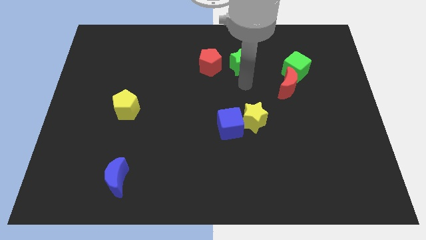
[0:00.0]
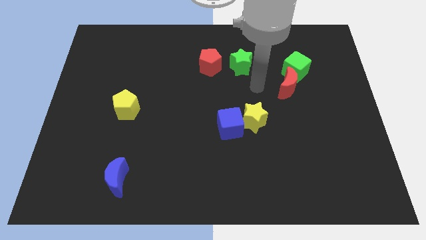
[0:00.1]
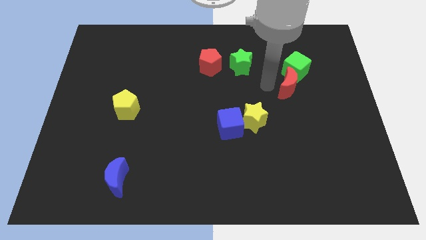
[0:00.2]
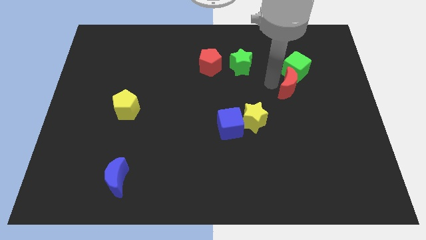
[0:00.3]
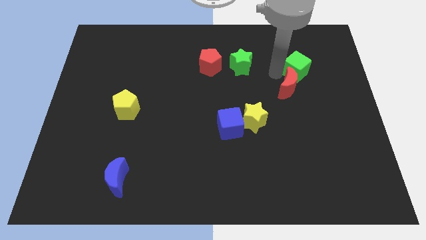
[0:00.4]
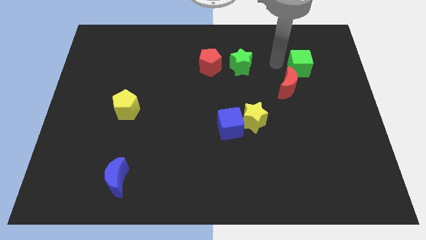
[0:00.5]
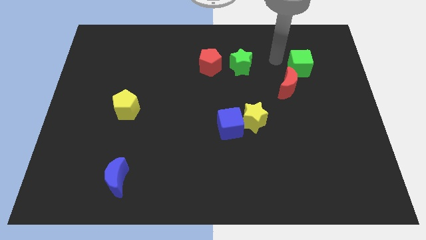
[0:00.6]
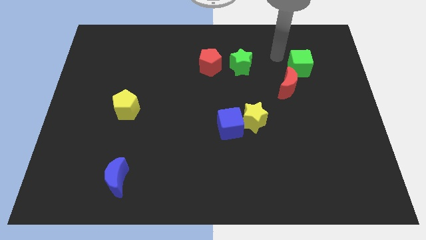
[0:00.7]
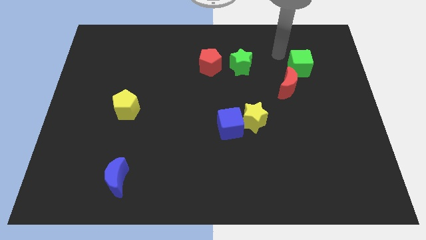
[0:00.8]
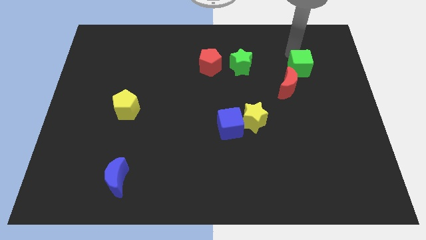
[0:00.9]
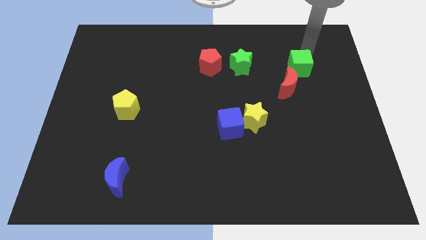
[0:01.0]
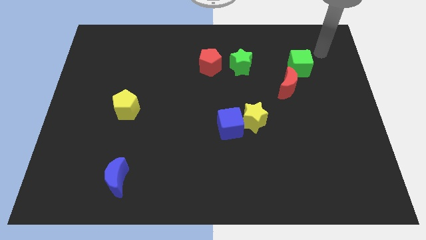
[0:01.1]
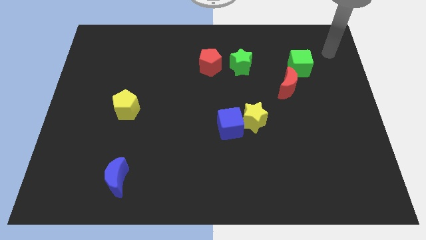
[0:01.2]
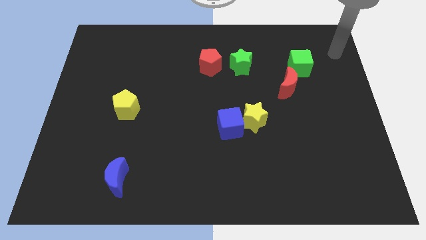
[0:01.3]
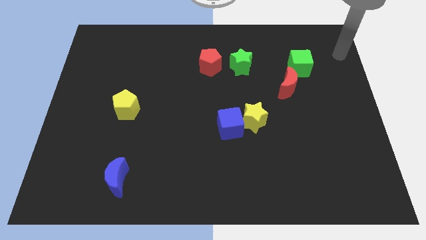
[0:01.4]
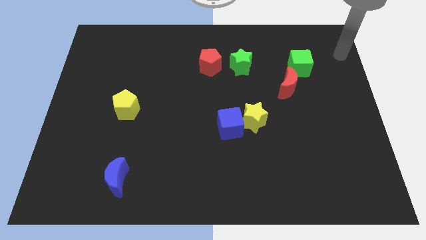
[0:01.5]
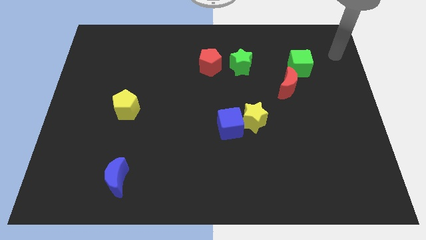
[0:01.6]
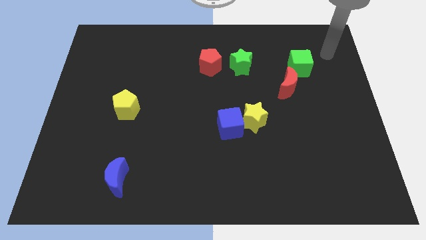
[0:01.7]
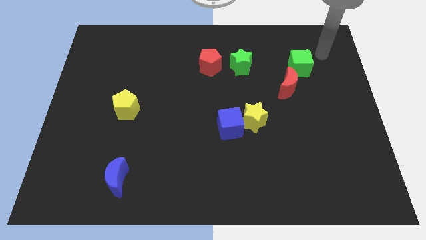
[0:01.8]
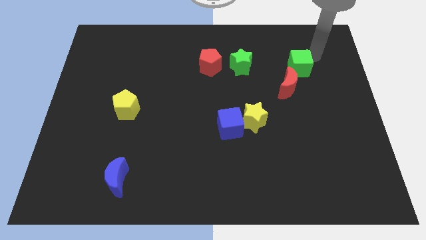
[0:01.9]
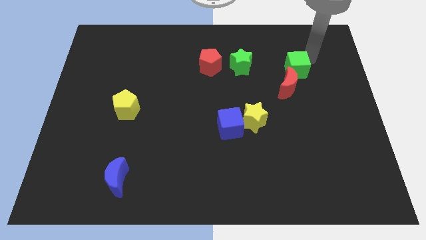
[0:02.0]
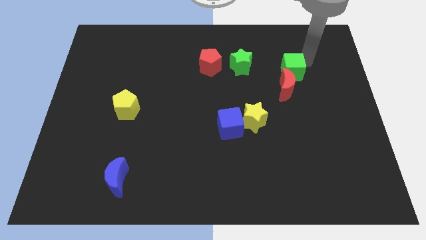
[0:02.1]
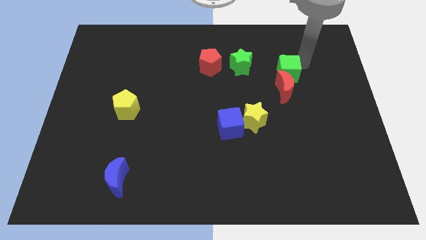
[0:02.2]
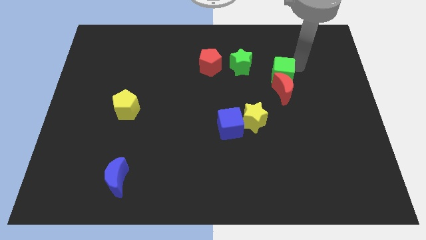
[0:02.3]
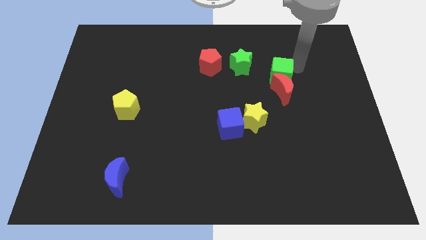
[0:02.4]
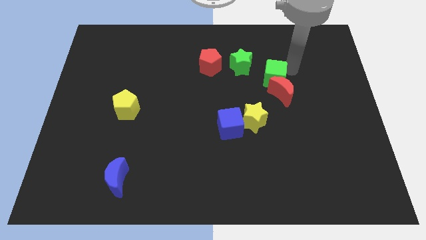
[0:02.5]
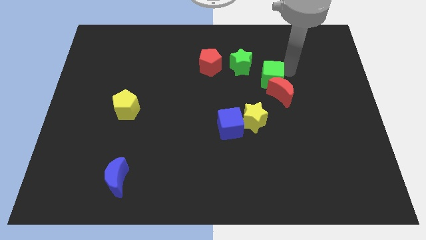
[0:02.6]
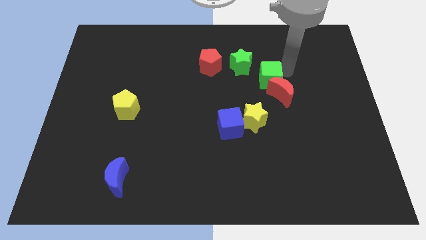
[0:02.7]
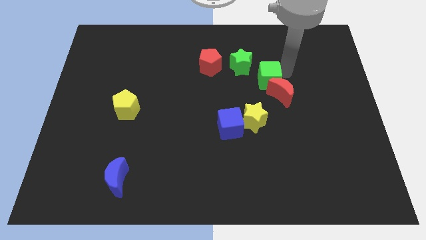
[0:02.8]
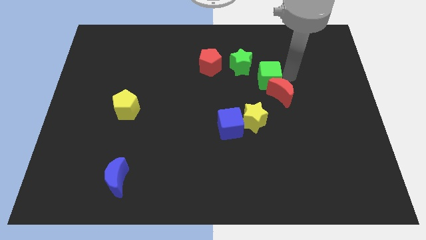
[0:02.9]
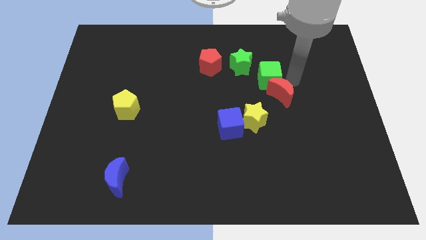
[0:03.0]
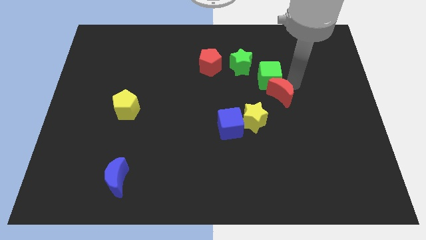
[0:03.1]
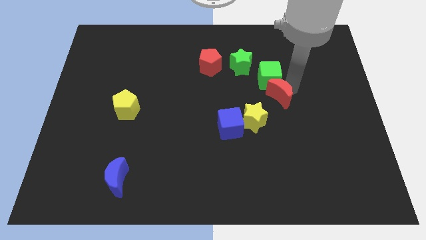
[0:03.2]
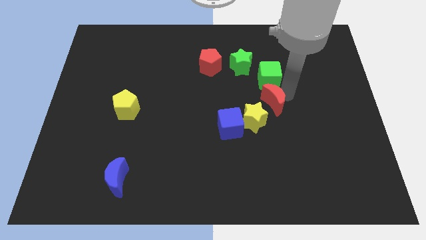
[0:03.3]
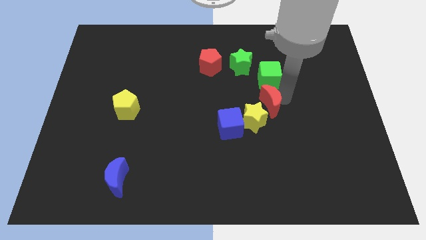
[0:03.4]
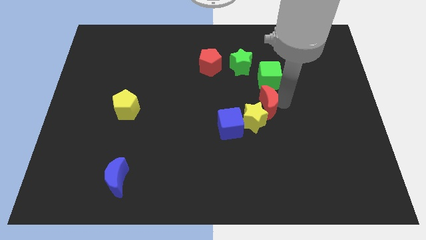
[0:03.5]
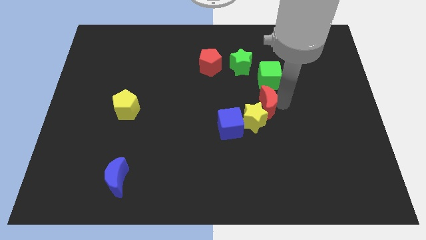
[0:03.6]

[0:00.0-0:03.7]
move green cube and red moon towards the center

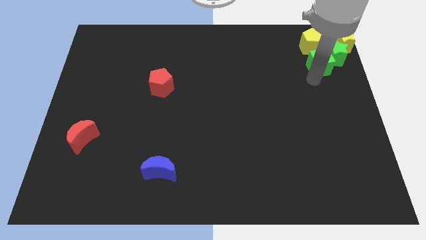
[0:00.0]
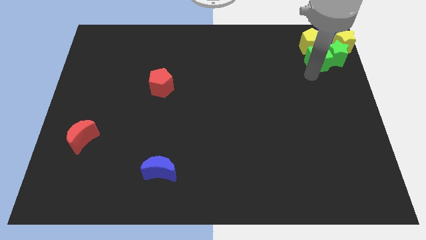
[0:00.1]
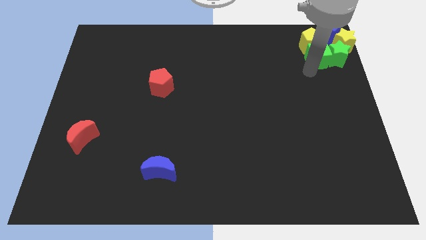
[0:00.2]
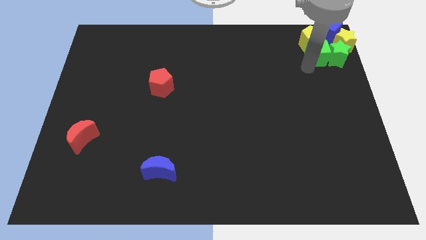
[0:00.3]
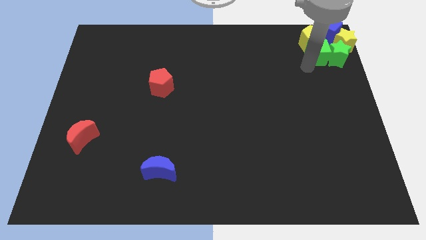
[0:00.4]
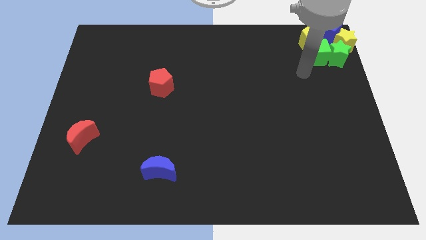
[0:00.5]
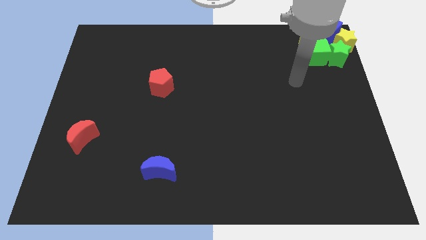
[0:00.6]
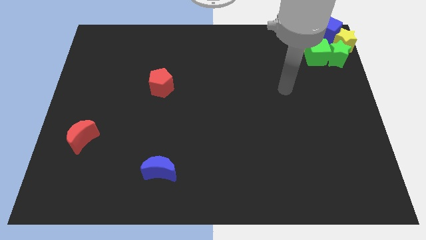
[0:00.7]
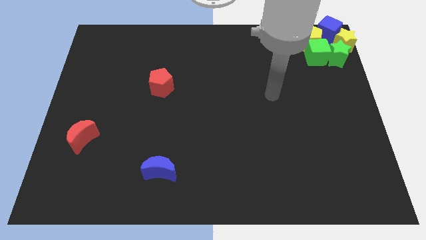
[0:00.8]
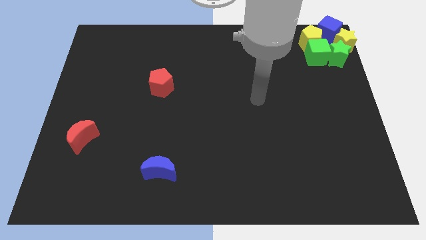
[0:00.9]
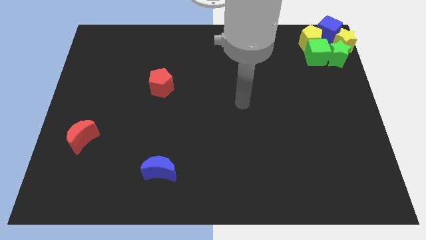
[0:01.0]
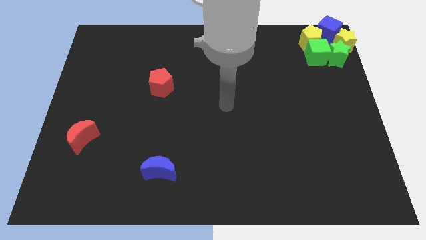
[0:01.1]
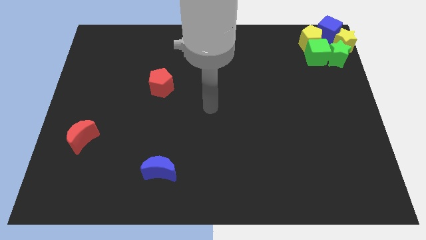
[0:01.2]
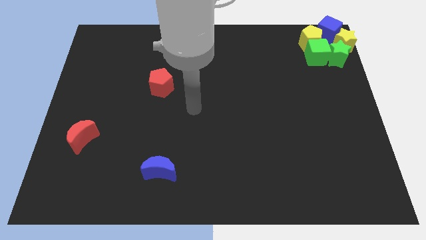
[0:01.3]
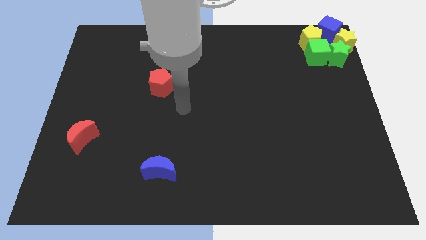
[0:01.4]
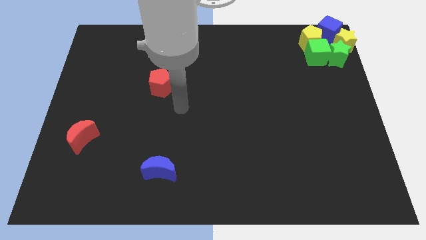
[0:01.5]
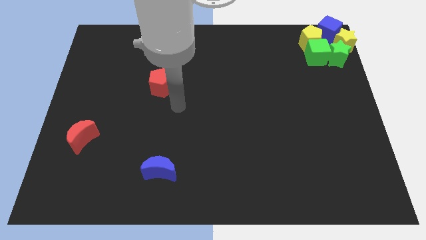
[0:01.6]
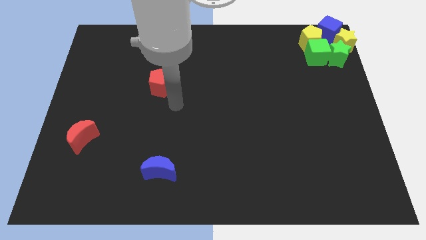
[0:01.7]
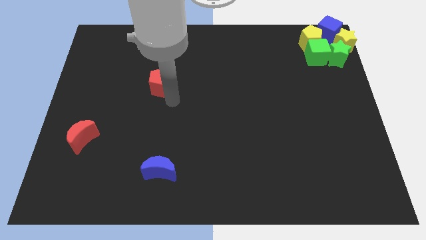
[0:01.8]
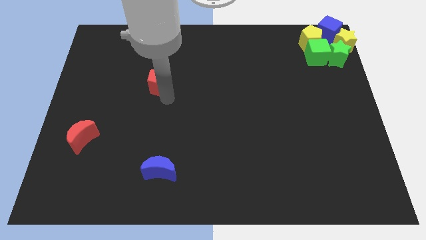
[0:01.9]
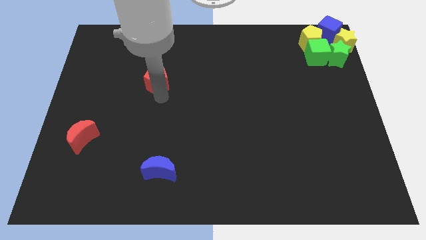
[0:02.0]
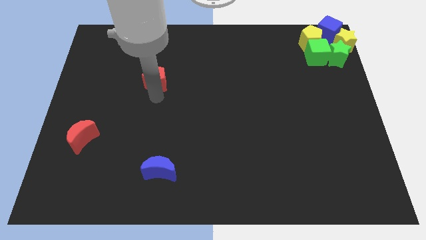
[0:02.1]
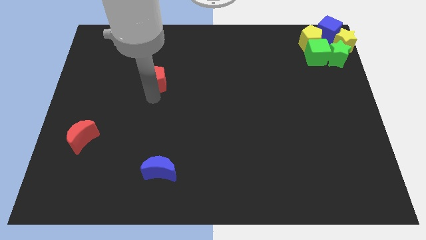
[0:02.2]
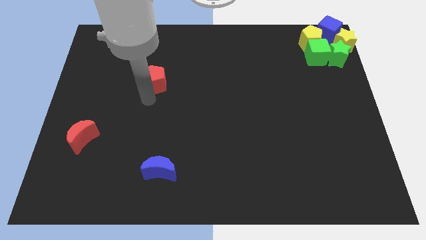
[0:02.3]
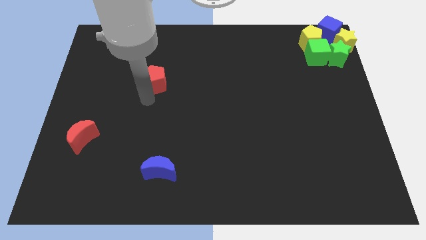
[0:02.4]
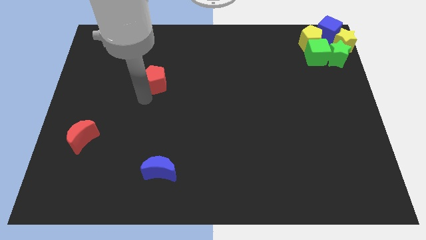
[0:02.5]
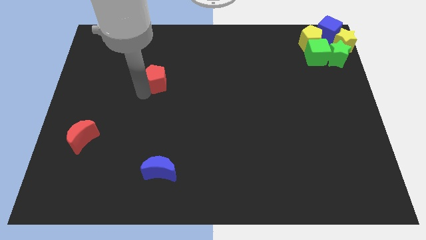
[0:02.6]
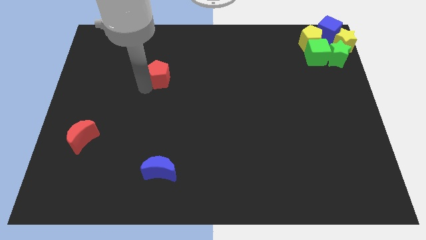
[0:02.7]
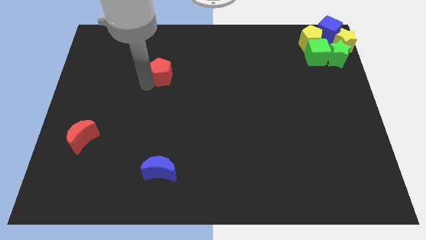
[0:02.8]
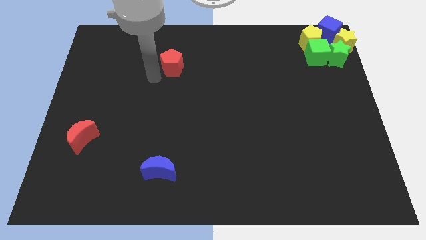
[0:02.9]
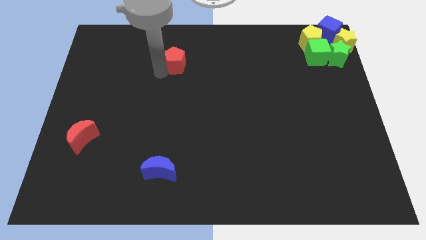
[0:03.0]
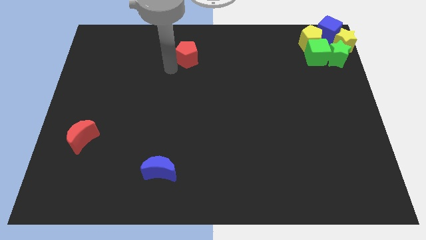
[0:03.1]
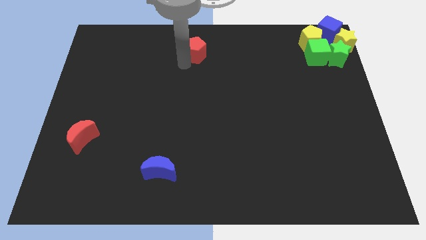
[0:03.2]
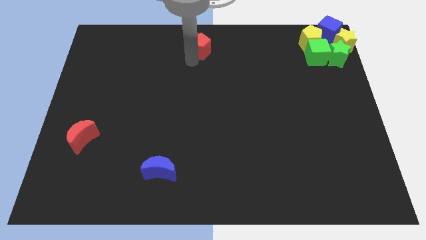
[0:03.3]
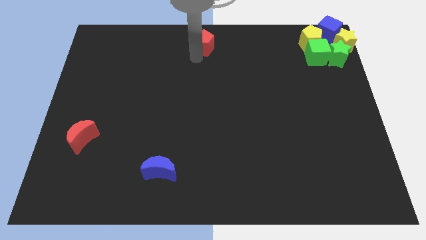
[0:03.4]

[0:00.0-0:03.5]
move the red pentagon towards the top center

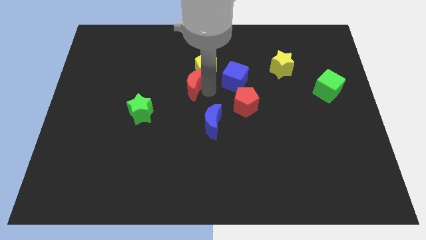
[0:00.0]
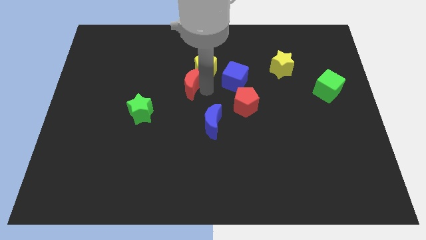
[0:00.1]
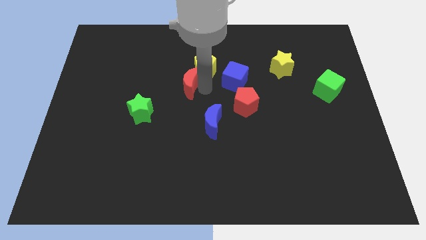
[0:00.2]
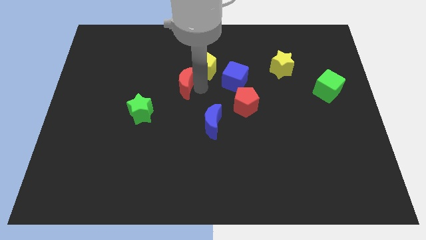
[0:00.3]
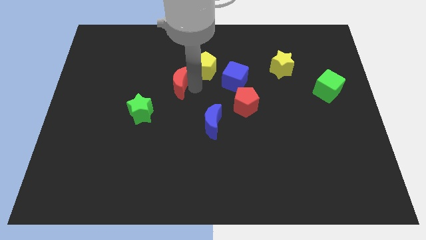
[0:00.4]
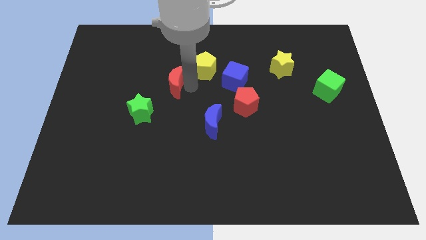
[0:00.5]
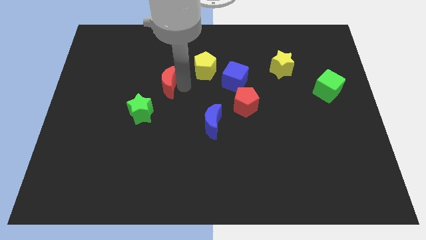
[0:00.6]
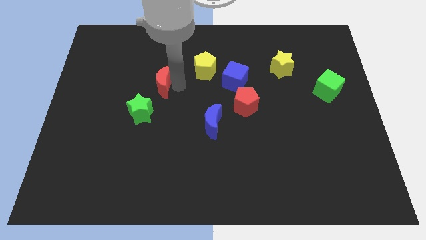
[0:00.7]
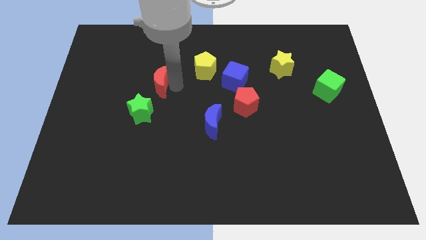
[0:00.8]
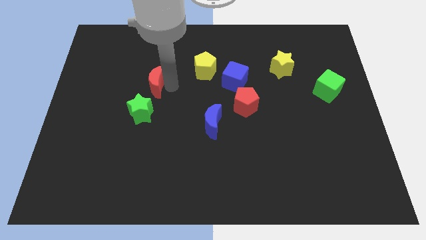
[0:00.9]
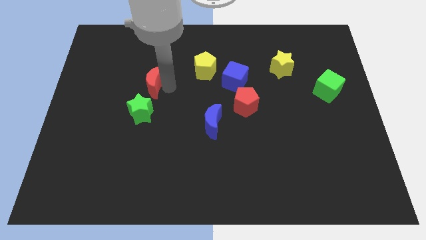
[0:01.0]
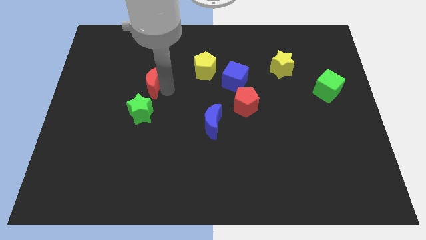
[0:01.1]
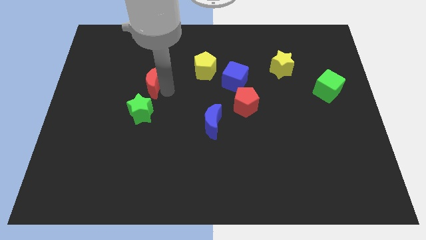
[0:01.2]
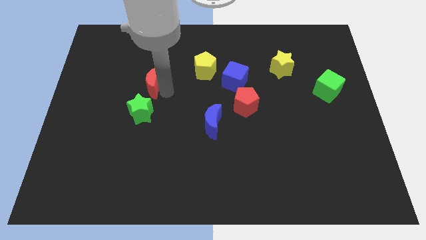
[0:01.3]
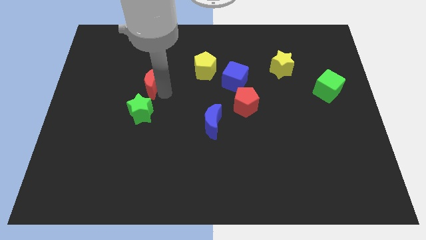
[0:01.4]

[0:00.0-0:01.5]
move the red crescent to the top of the green star

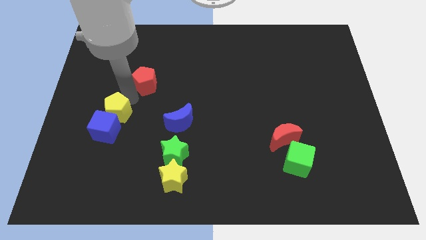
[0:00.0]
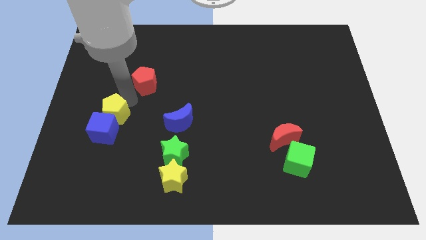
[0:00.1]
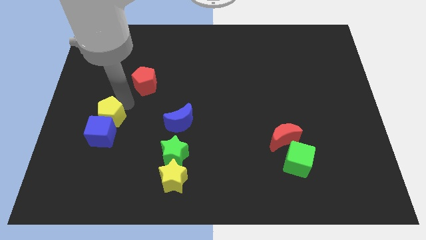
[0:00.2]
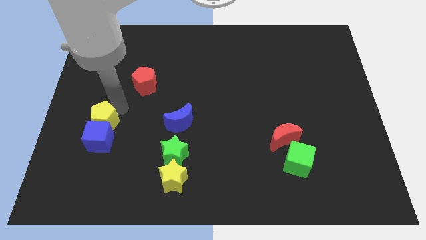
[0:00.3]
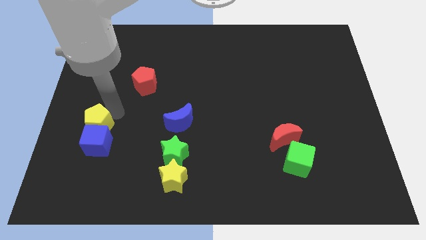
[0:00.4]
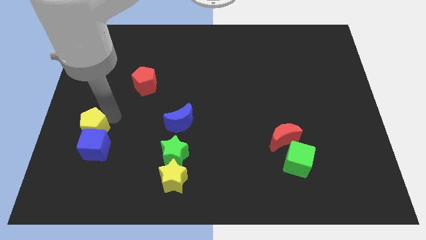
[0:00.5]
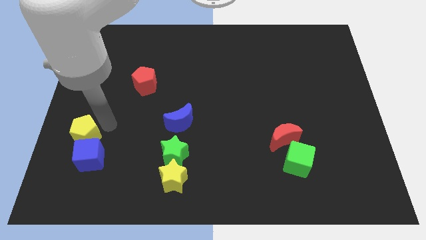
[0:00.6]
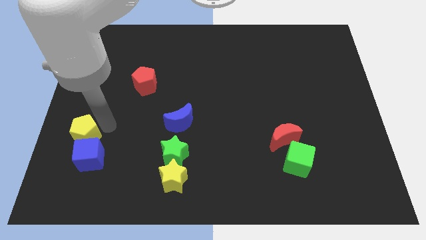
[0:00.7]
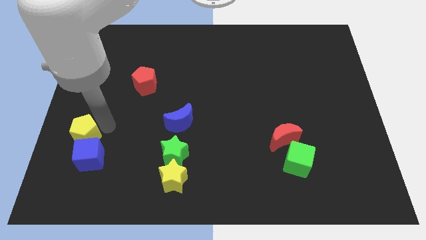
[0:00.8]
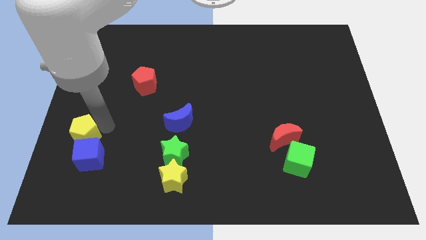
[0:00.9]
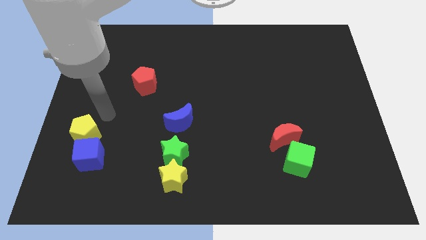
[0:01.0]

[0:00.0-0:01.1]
move blue cube along with yellow pentagon towards bottom
